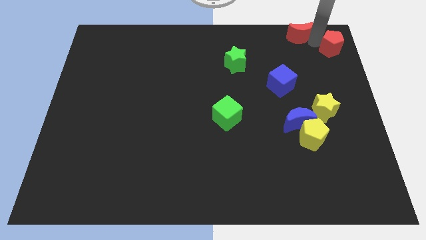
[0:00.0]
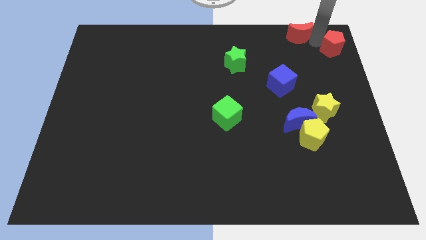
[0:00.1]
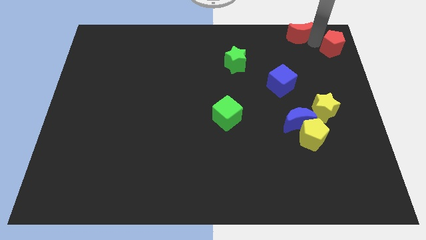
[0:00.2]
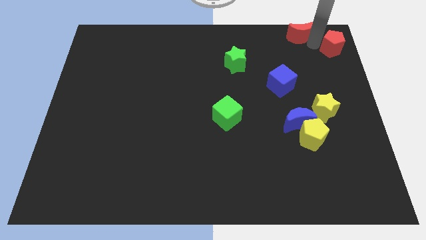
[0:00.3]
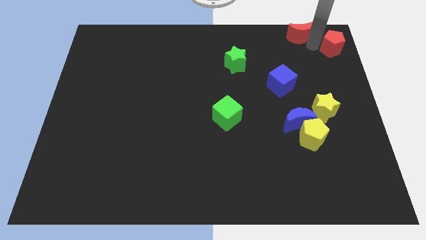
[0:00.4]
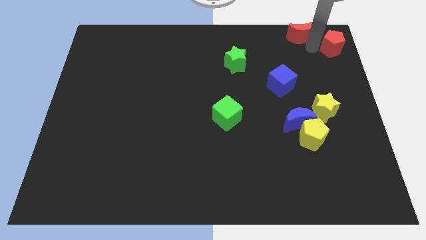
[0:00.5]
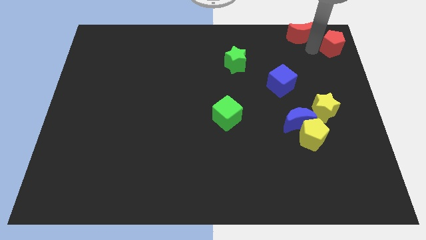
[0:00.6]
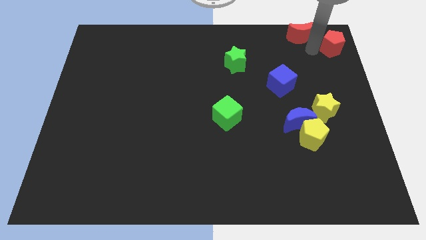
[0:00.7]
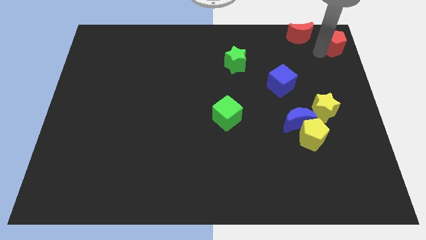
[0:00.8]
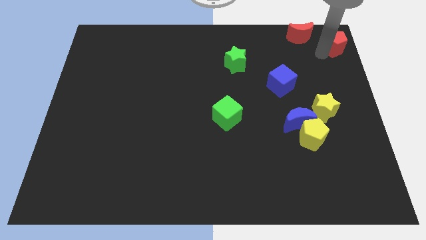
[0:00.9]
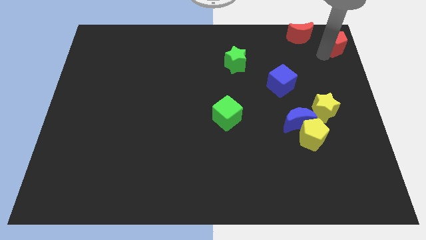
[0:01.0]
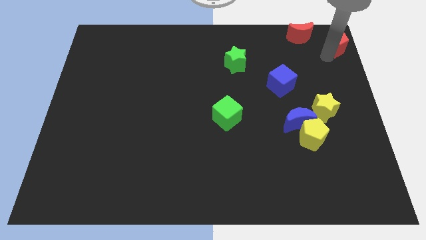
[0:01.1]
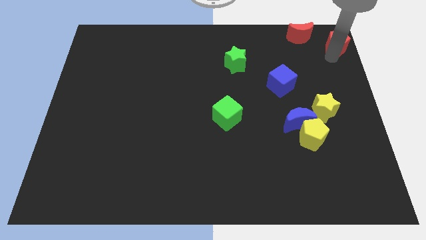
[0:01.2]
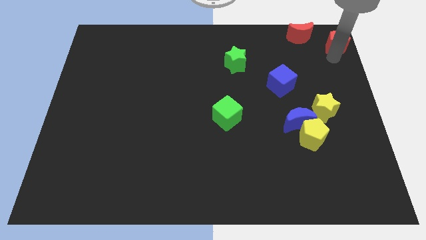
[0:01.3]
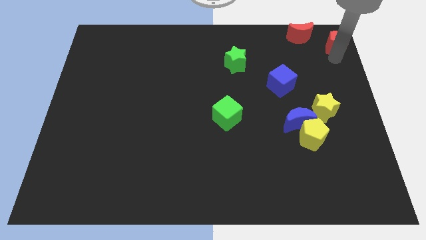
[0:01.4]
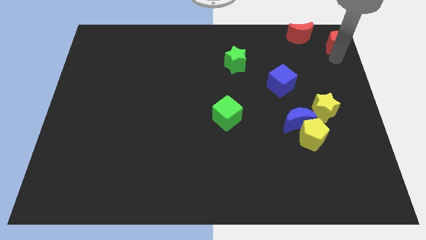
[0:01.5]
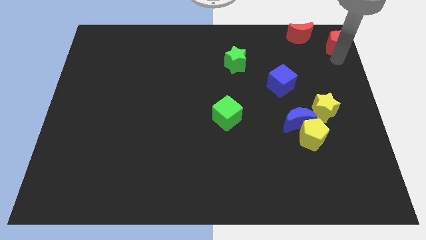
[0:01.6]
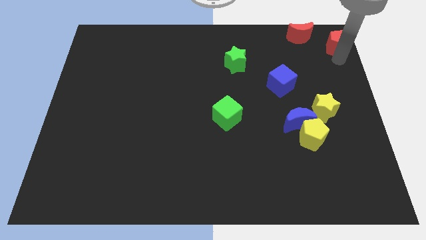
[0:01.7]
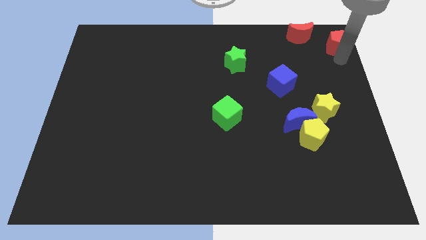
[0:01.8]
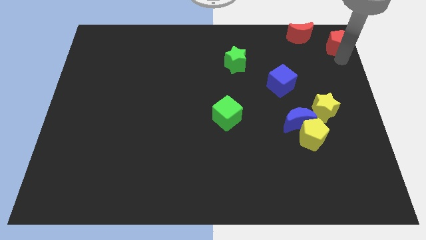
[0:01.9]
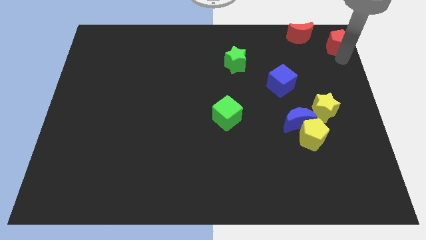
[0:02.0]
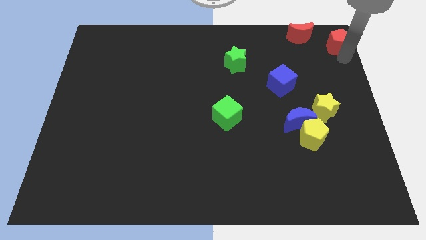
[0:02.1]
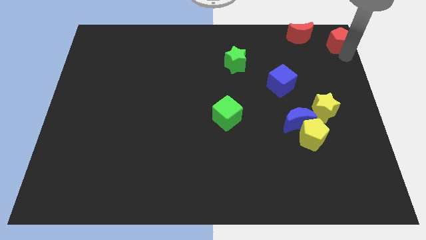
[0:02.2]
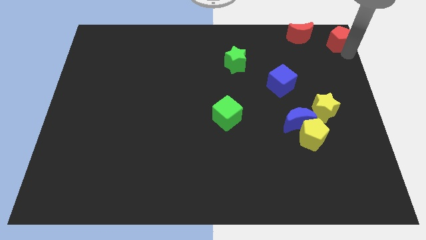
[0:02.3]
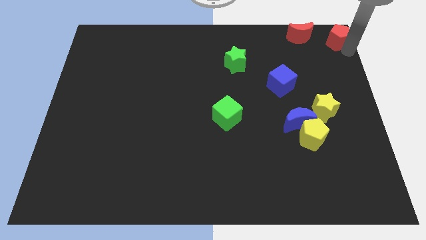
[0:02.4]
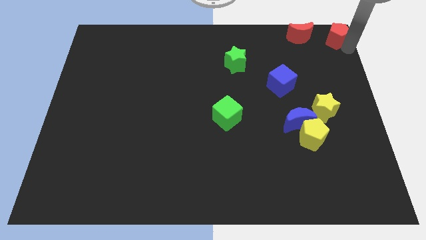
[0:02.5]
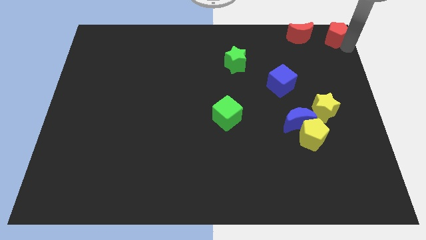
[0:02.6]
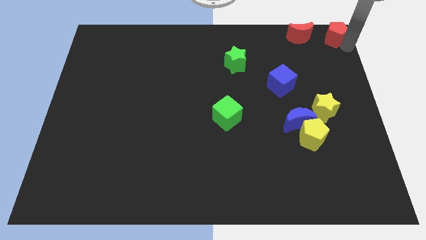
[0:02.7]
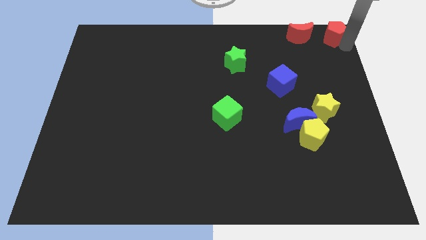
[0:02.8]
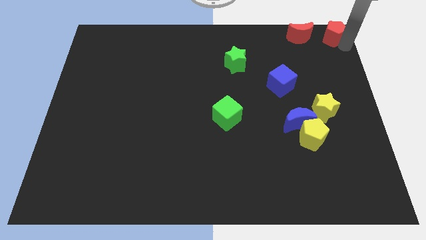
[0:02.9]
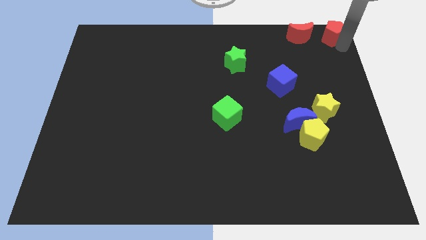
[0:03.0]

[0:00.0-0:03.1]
push the red pentagon to the top right corner of the board

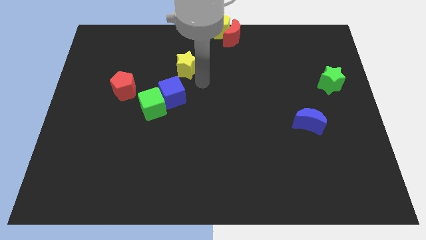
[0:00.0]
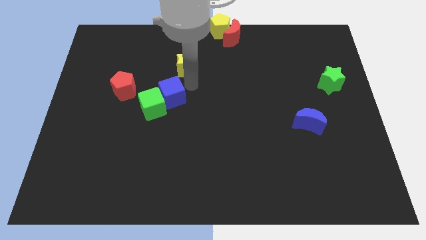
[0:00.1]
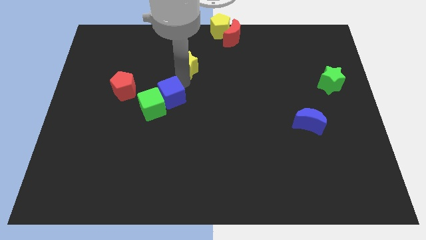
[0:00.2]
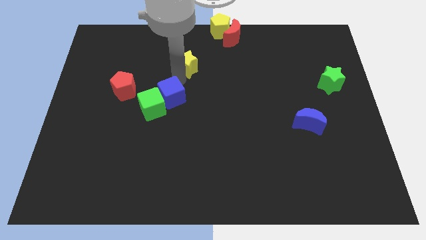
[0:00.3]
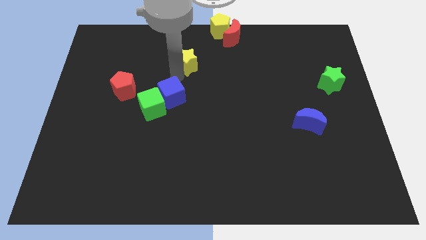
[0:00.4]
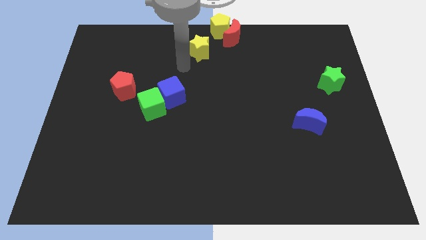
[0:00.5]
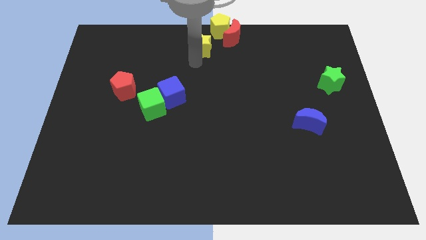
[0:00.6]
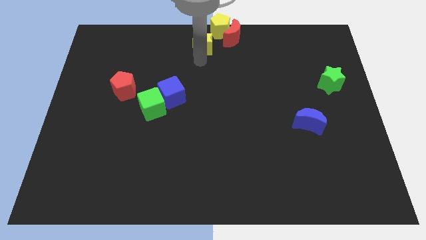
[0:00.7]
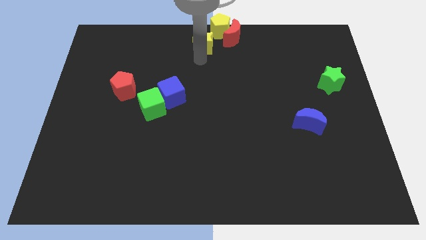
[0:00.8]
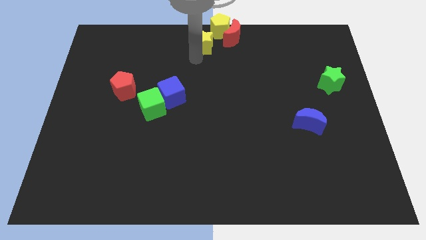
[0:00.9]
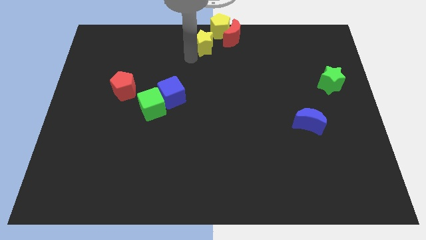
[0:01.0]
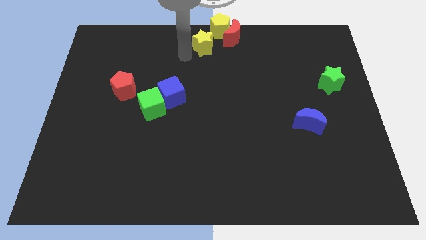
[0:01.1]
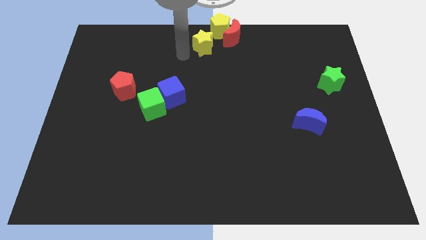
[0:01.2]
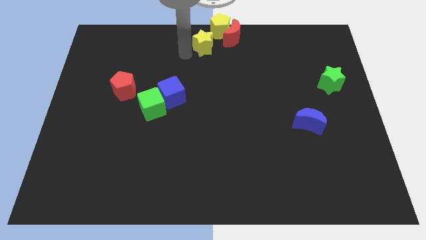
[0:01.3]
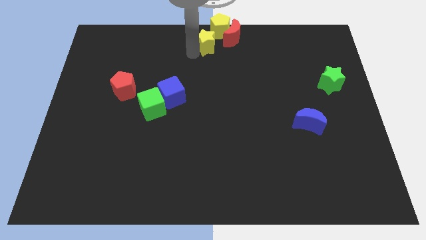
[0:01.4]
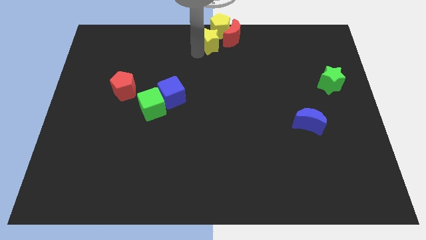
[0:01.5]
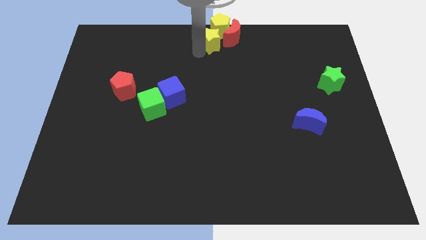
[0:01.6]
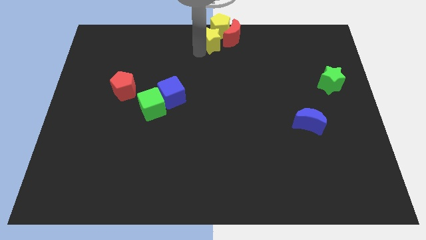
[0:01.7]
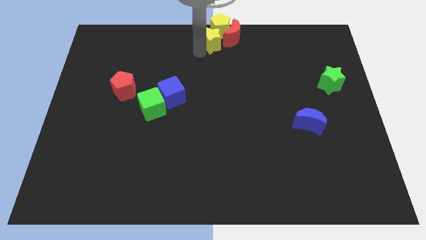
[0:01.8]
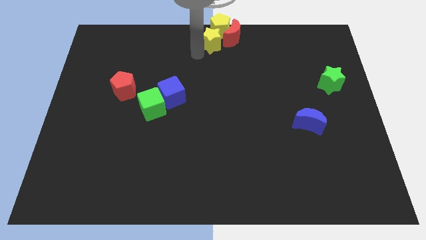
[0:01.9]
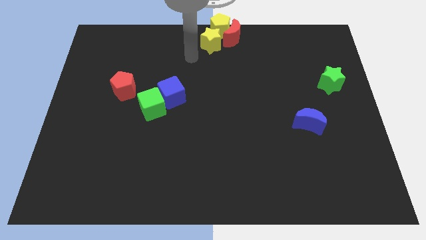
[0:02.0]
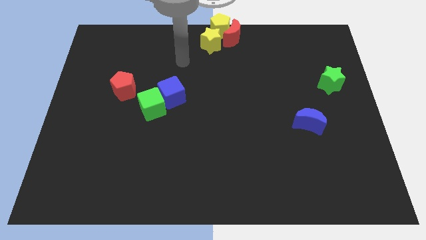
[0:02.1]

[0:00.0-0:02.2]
push the yellow star into the yellow pentagon

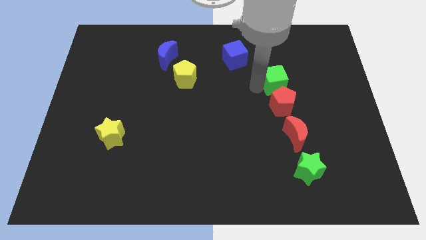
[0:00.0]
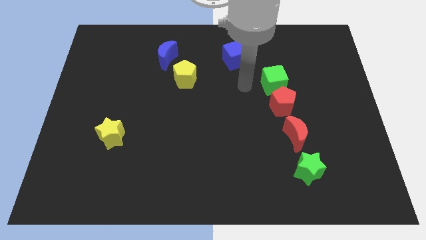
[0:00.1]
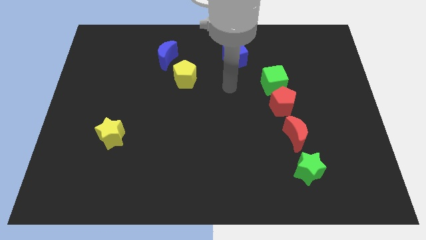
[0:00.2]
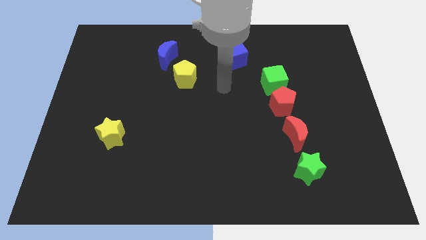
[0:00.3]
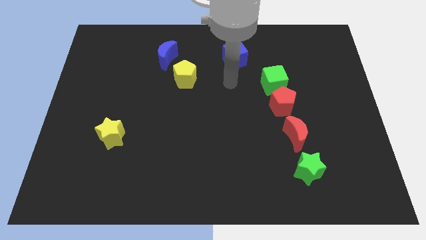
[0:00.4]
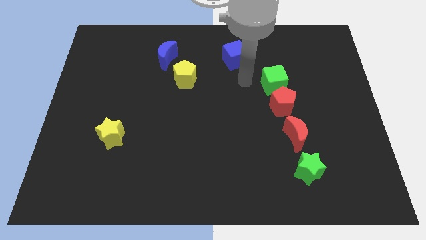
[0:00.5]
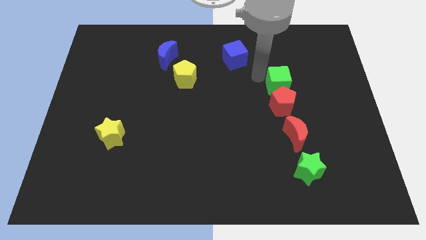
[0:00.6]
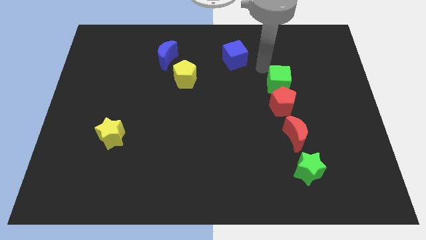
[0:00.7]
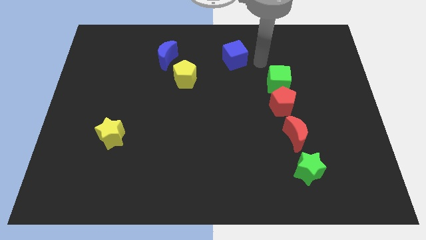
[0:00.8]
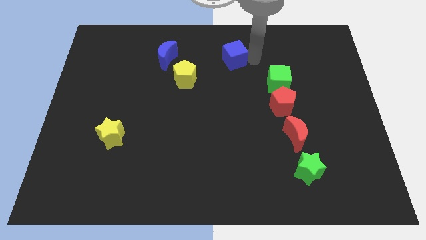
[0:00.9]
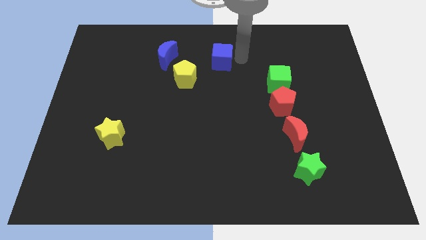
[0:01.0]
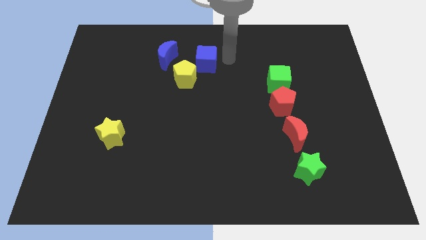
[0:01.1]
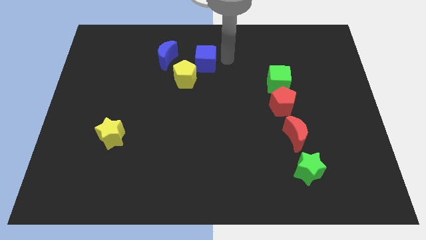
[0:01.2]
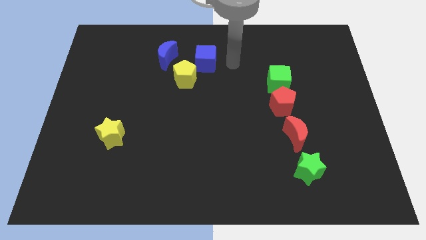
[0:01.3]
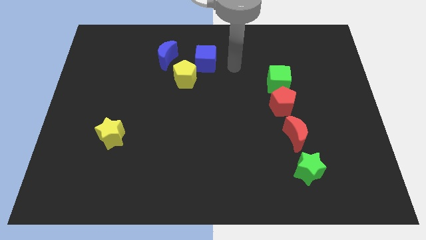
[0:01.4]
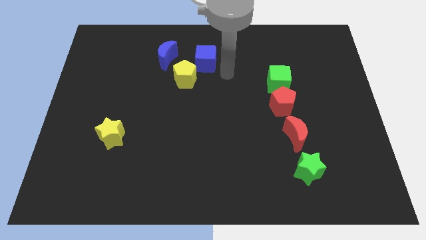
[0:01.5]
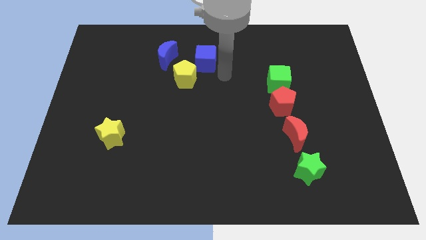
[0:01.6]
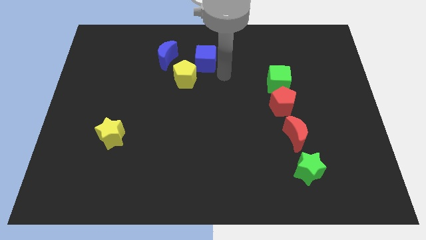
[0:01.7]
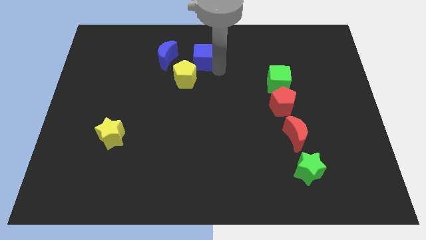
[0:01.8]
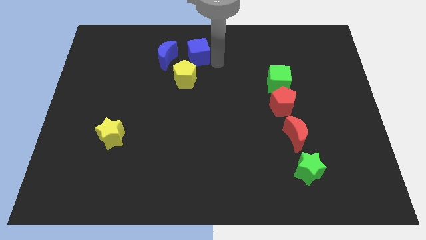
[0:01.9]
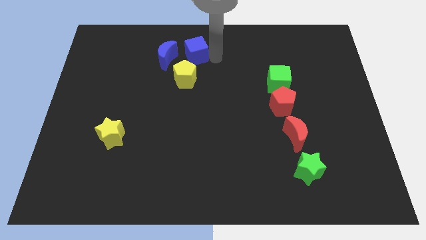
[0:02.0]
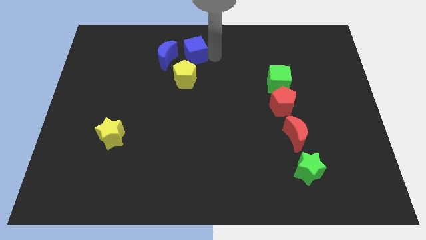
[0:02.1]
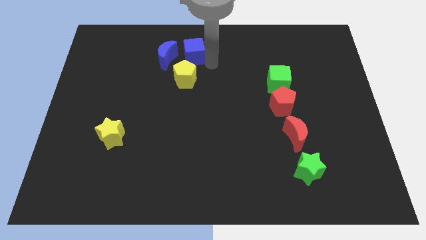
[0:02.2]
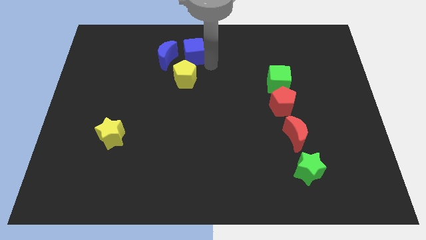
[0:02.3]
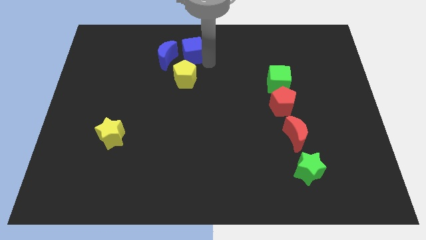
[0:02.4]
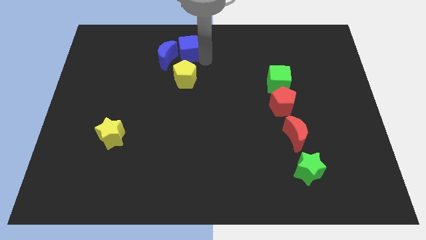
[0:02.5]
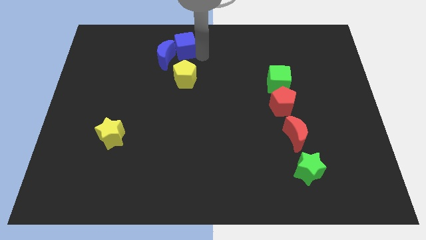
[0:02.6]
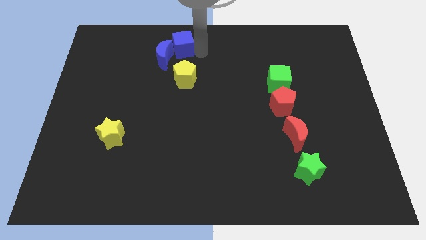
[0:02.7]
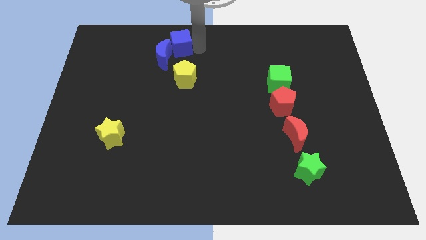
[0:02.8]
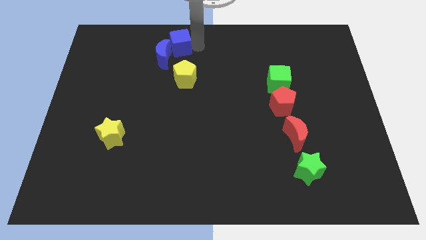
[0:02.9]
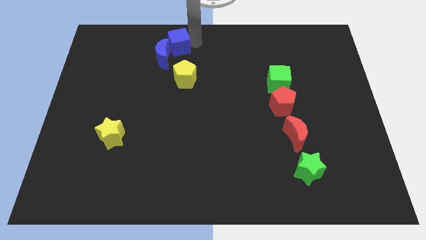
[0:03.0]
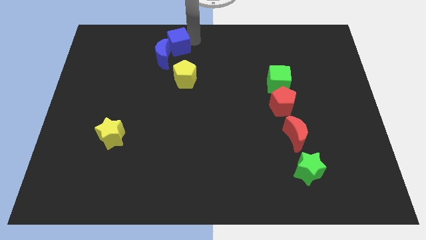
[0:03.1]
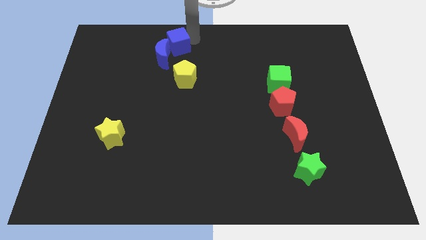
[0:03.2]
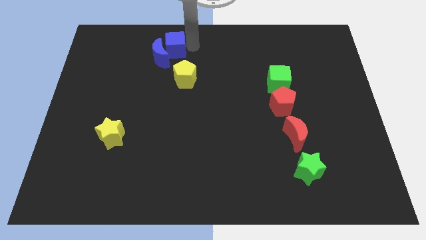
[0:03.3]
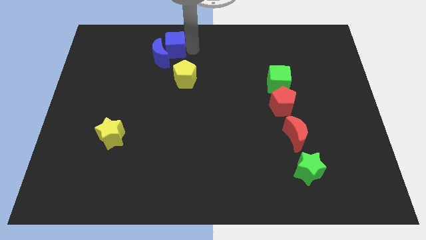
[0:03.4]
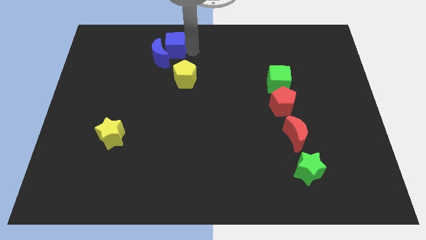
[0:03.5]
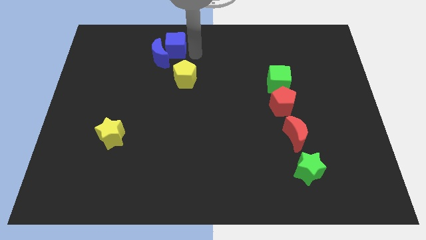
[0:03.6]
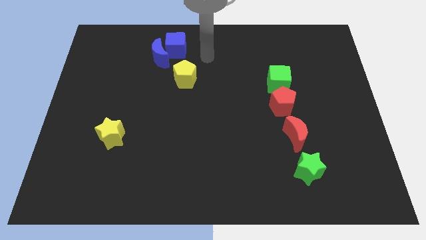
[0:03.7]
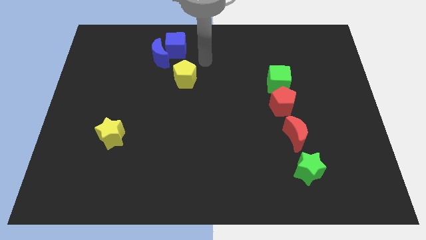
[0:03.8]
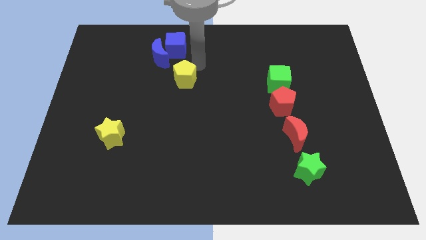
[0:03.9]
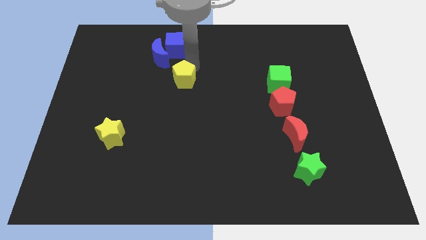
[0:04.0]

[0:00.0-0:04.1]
push the blue cube into the blue moon
